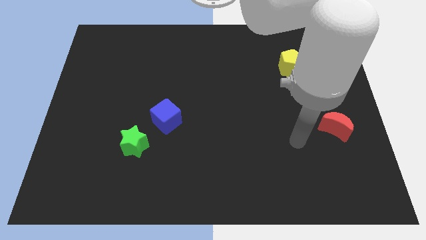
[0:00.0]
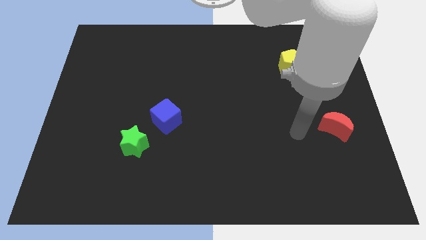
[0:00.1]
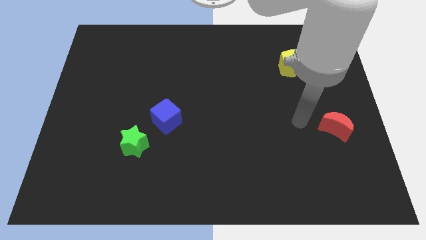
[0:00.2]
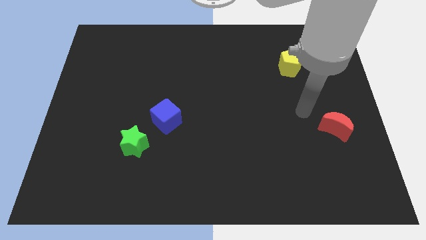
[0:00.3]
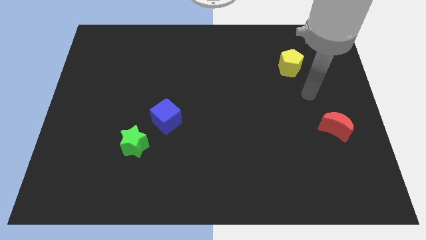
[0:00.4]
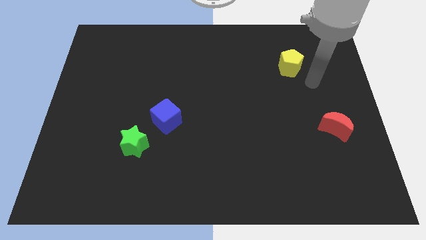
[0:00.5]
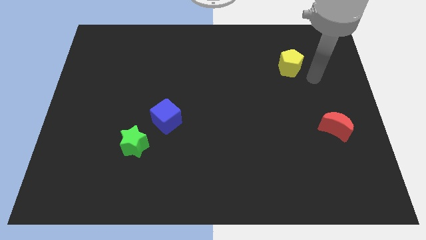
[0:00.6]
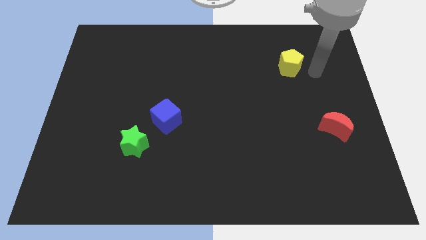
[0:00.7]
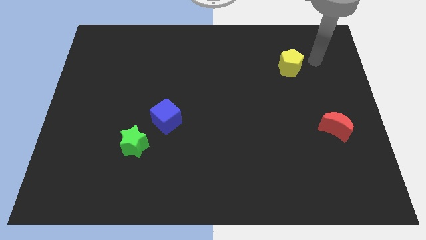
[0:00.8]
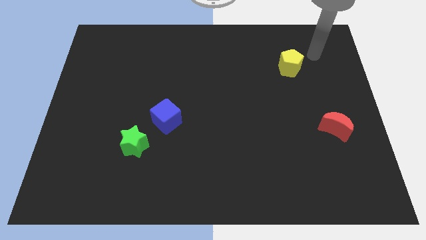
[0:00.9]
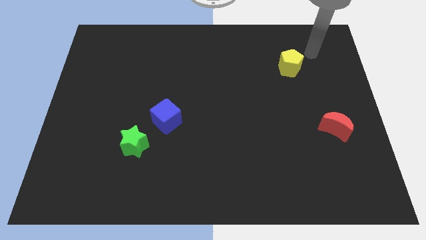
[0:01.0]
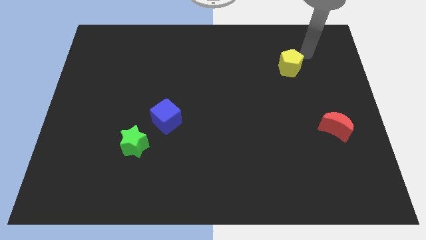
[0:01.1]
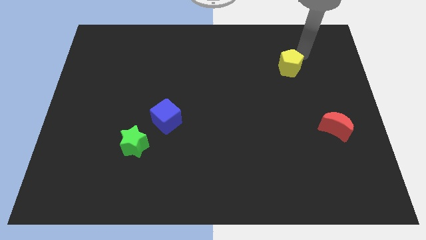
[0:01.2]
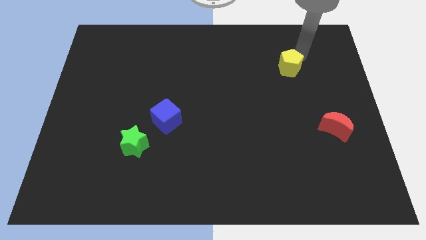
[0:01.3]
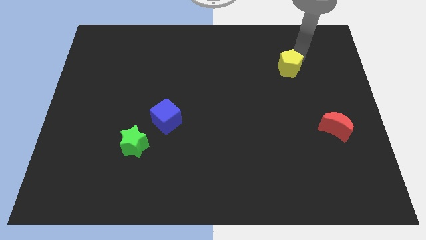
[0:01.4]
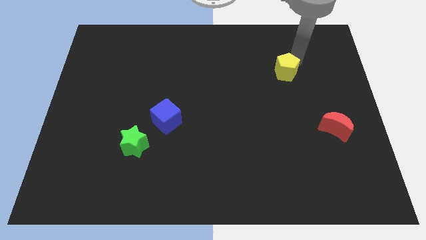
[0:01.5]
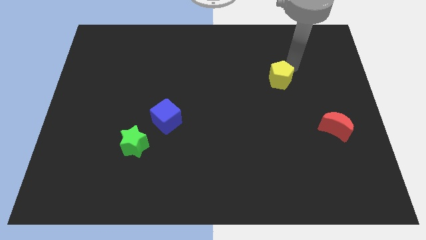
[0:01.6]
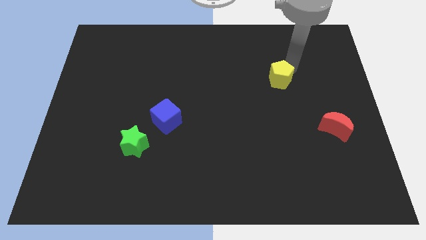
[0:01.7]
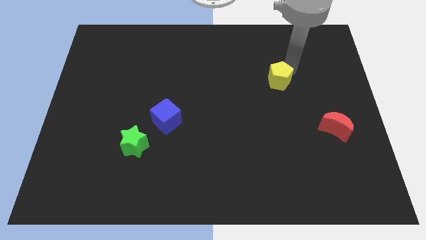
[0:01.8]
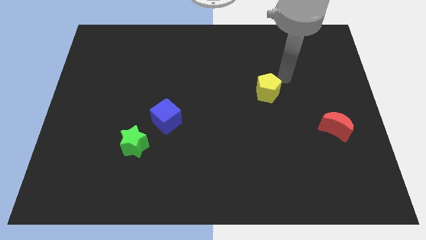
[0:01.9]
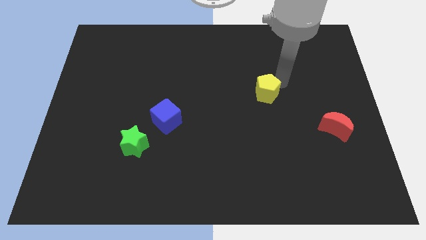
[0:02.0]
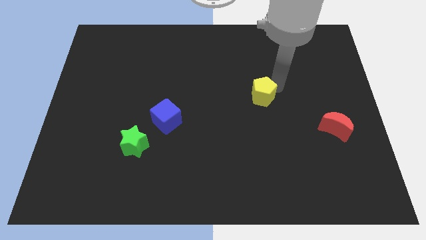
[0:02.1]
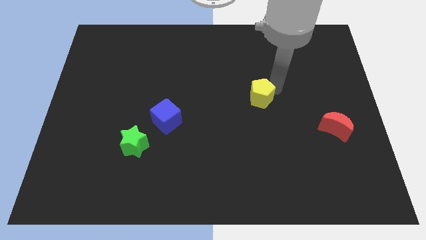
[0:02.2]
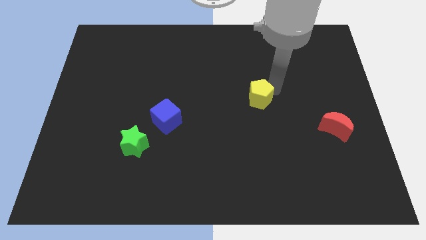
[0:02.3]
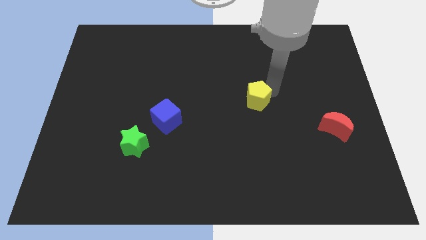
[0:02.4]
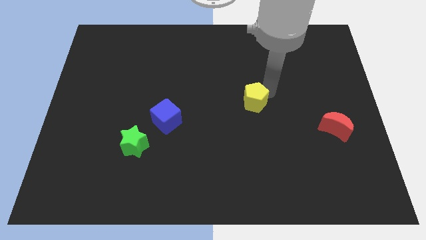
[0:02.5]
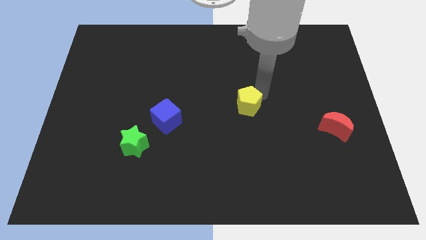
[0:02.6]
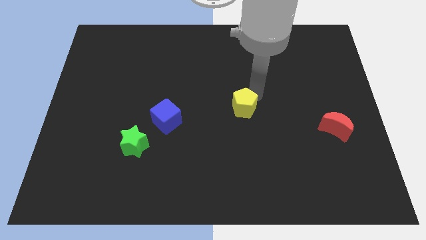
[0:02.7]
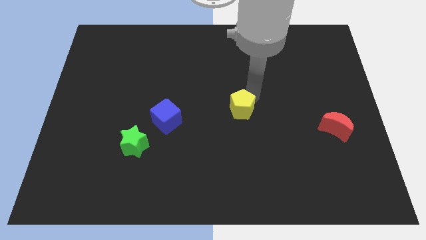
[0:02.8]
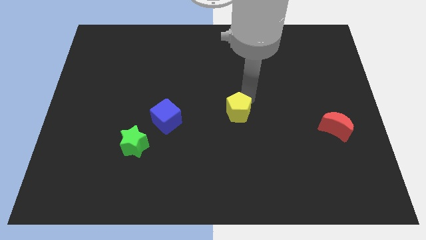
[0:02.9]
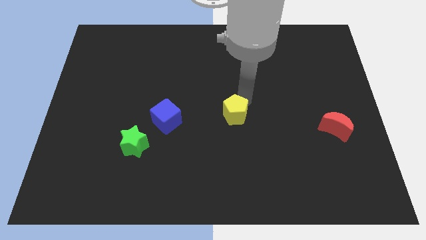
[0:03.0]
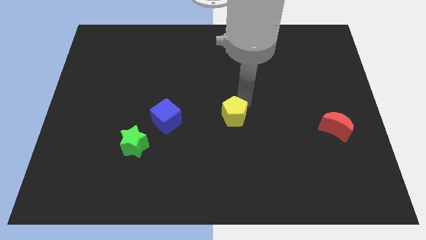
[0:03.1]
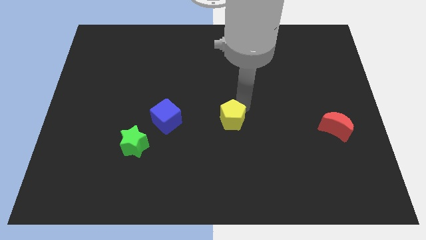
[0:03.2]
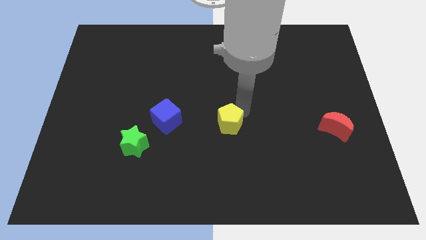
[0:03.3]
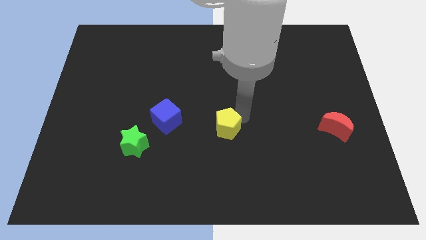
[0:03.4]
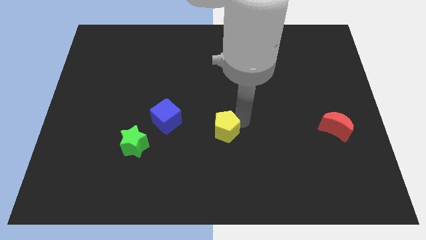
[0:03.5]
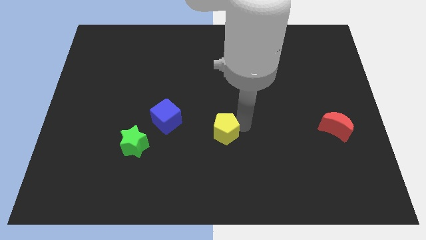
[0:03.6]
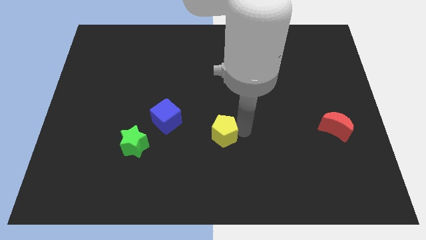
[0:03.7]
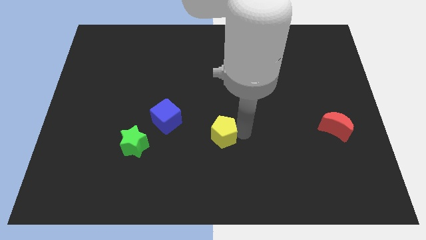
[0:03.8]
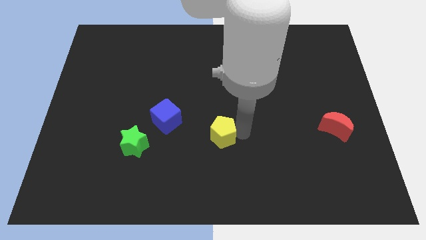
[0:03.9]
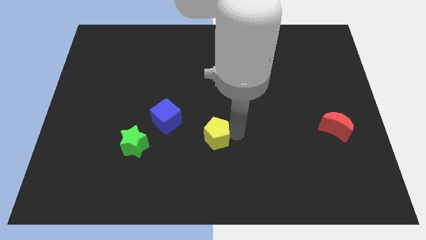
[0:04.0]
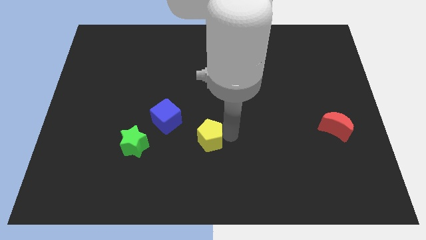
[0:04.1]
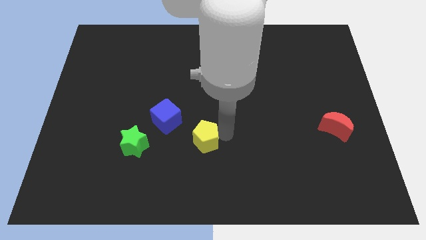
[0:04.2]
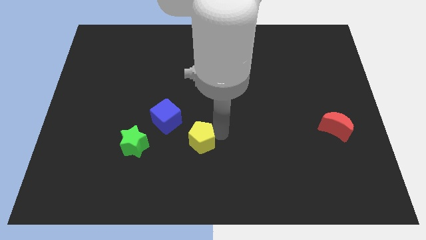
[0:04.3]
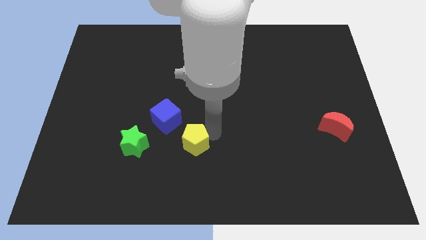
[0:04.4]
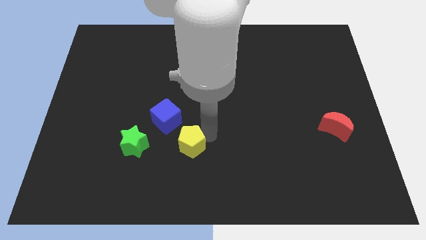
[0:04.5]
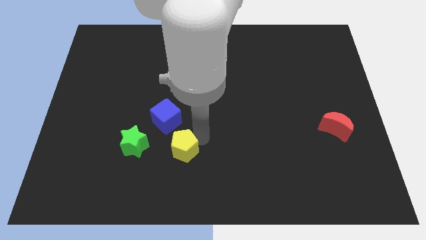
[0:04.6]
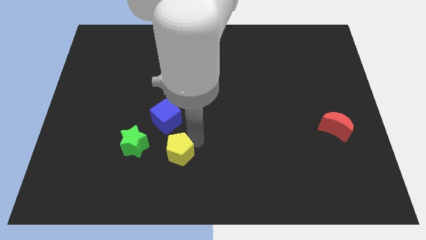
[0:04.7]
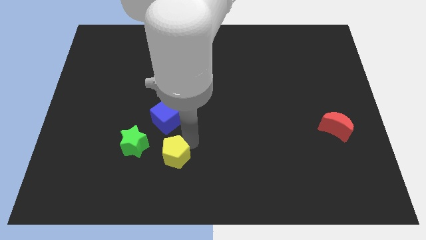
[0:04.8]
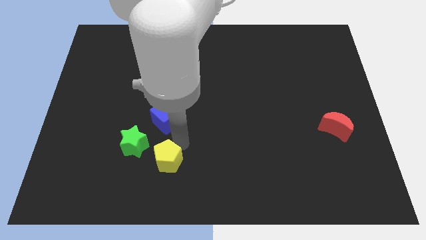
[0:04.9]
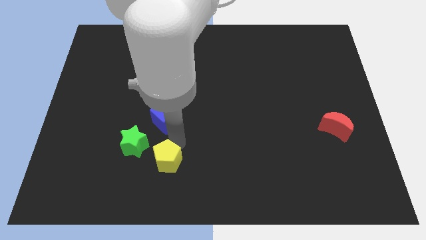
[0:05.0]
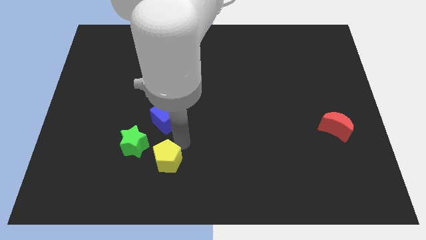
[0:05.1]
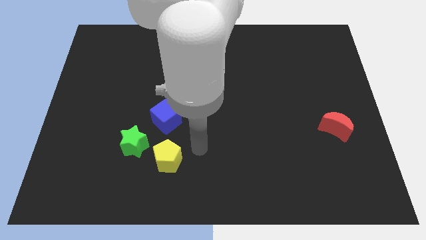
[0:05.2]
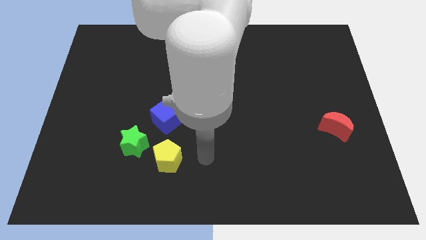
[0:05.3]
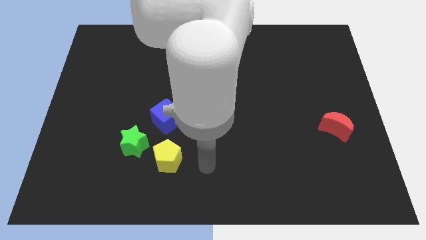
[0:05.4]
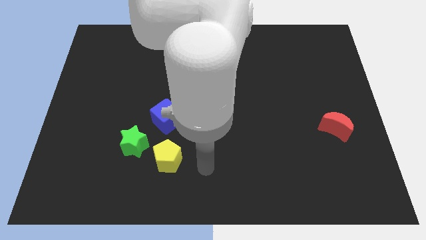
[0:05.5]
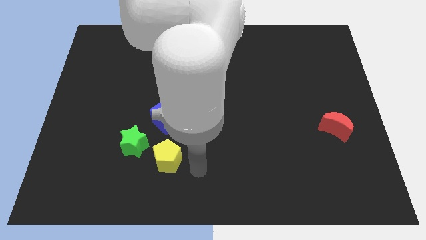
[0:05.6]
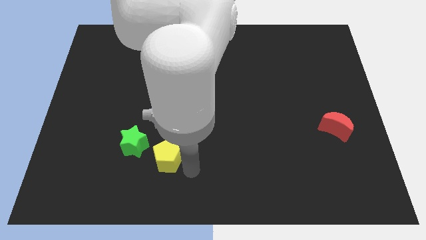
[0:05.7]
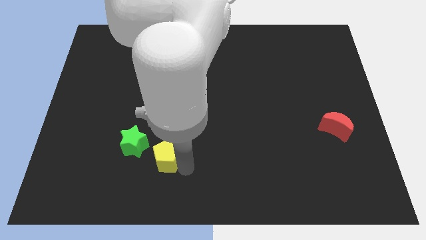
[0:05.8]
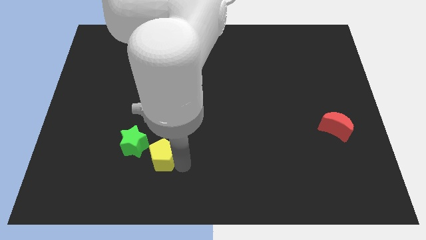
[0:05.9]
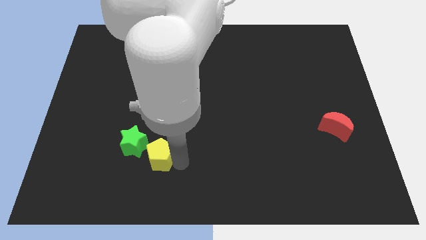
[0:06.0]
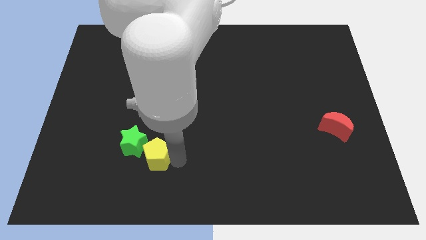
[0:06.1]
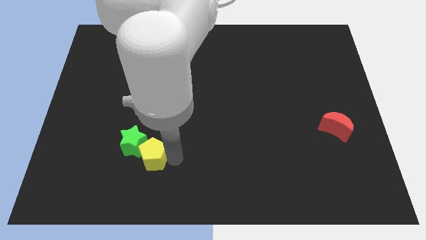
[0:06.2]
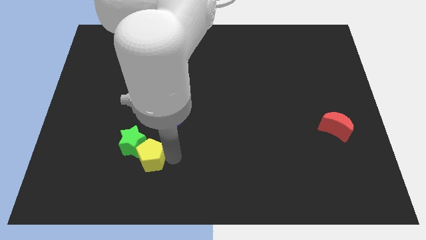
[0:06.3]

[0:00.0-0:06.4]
move the yellow pentagon towards the green block

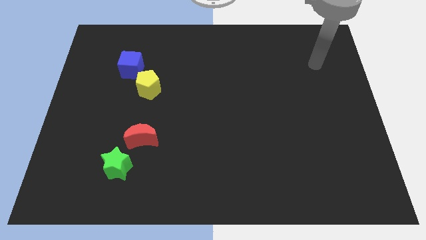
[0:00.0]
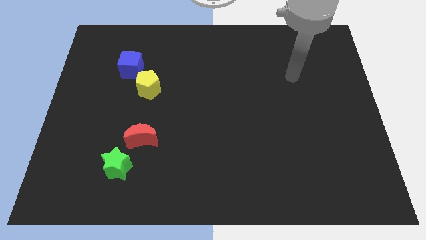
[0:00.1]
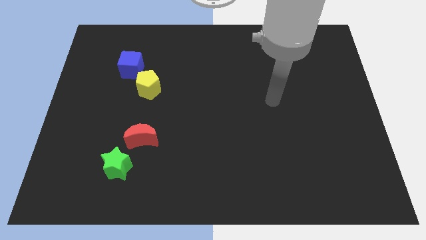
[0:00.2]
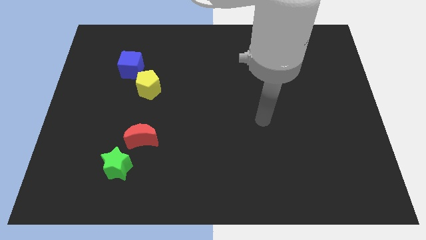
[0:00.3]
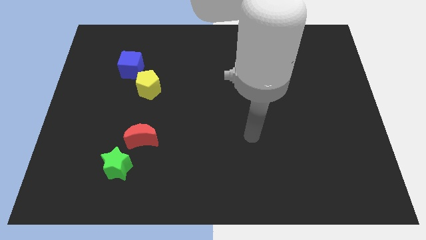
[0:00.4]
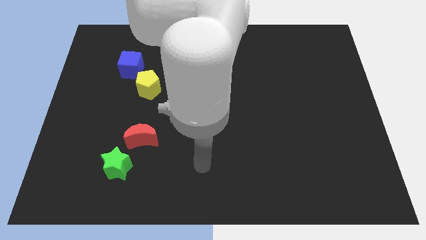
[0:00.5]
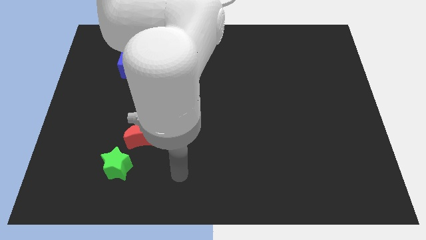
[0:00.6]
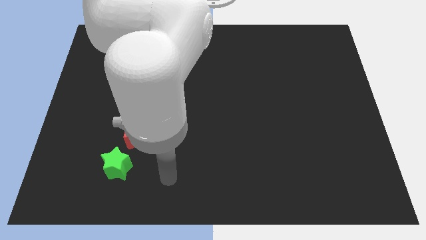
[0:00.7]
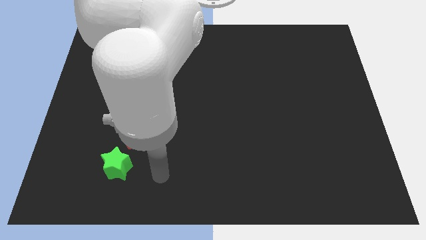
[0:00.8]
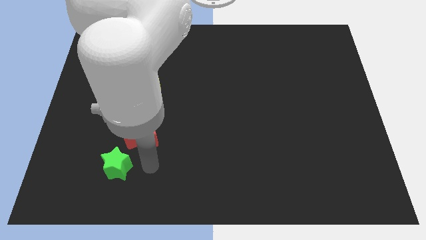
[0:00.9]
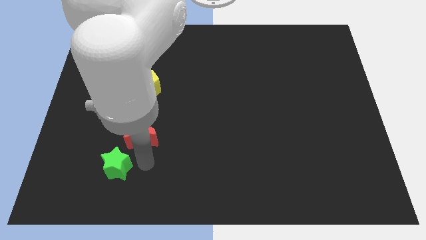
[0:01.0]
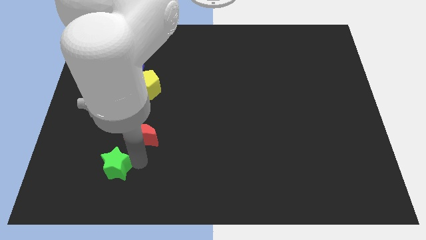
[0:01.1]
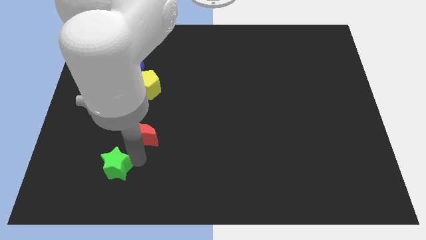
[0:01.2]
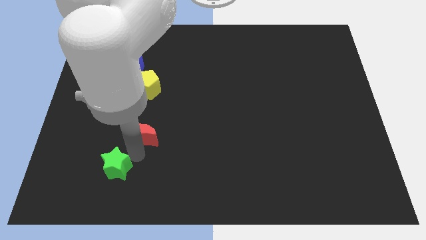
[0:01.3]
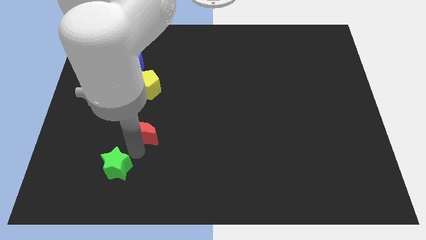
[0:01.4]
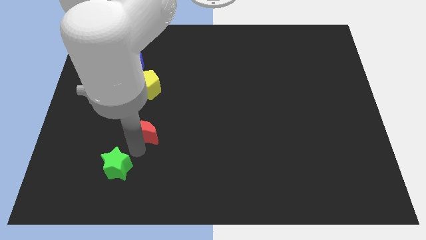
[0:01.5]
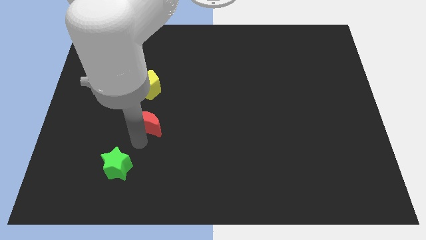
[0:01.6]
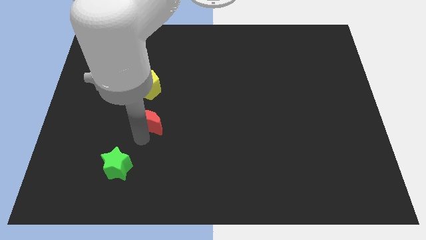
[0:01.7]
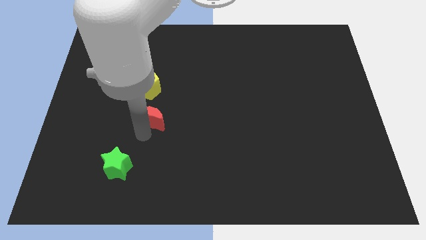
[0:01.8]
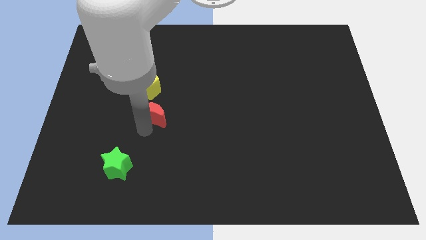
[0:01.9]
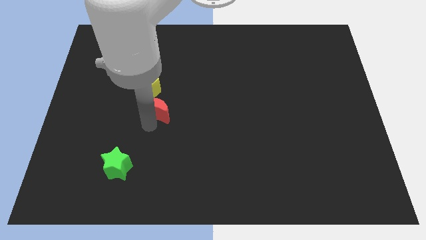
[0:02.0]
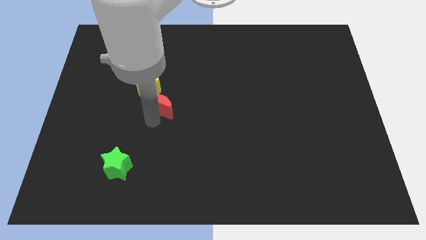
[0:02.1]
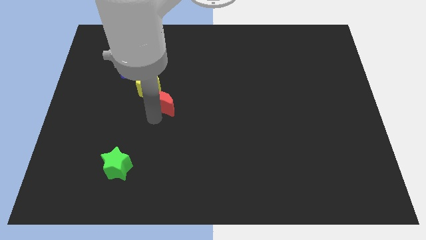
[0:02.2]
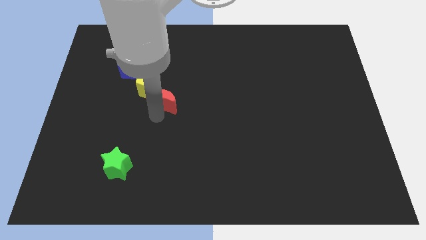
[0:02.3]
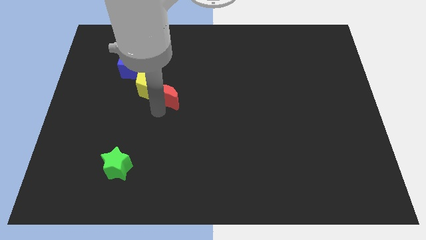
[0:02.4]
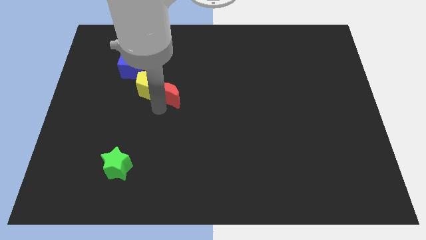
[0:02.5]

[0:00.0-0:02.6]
move the moon close to the yellow pentagon
